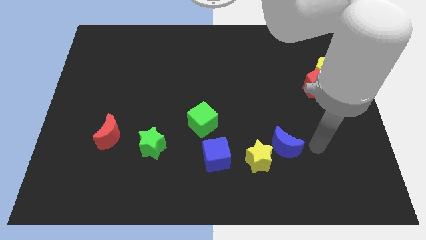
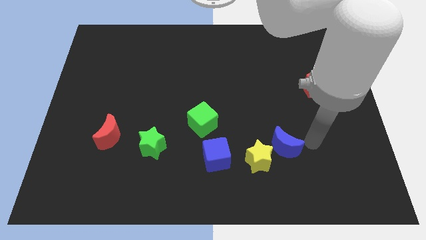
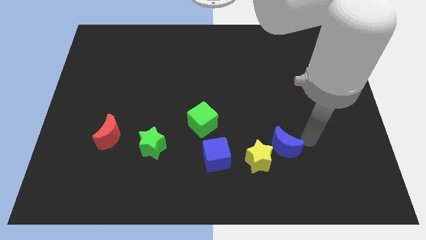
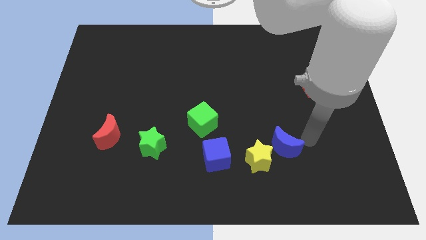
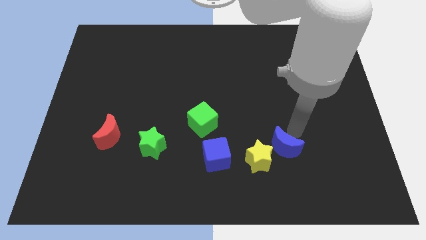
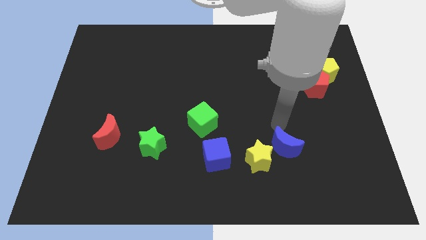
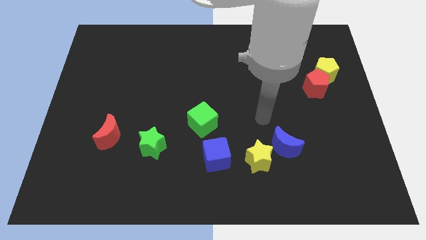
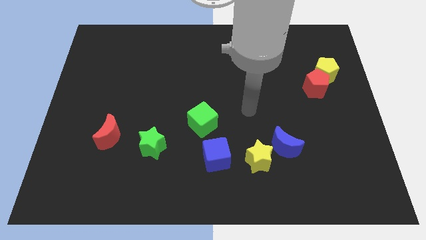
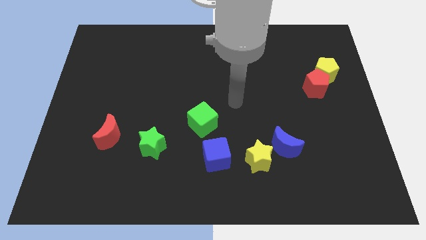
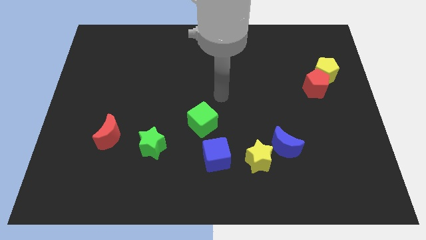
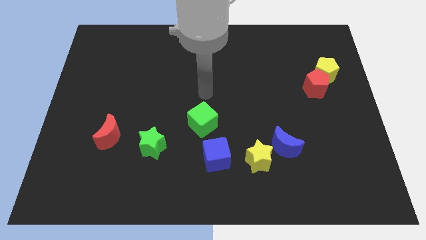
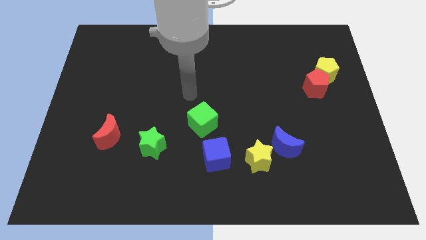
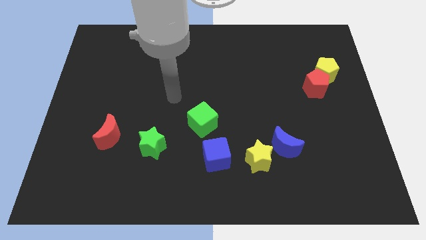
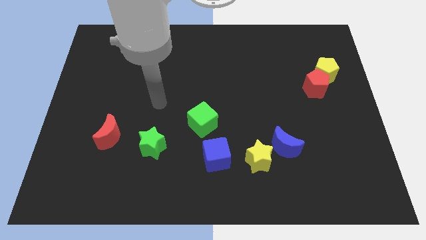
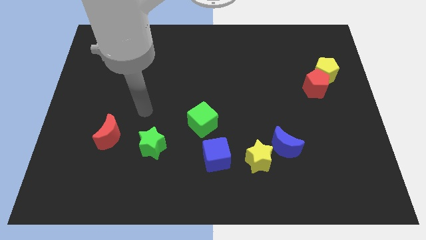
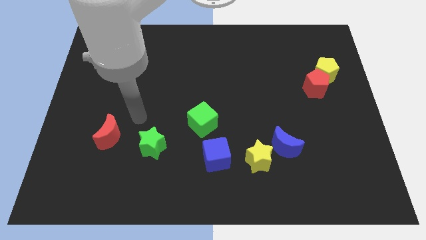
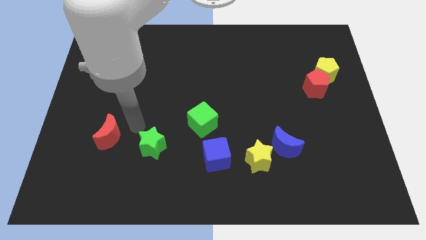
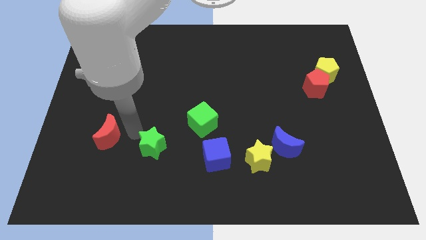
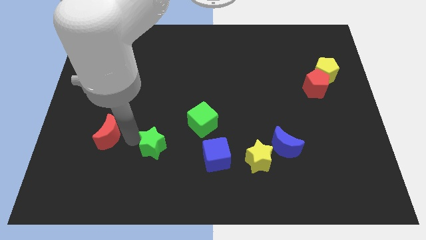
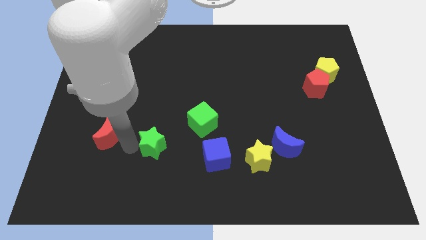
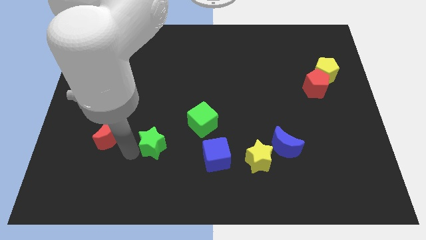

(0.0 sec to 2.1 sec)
move your arm to the left side of the green star

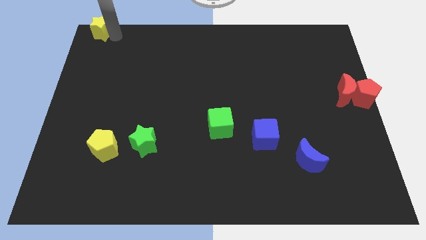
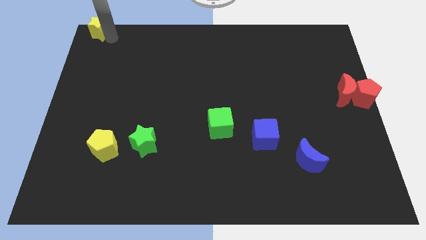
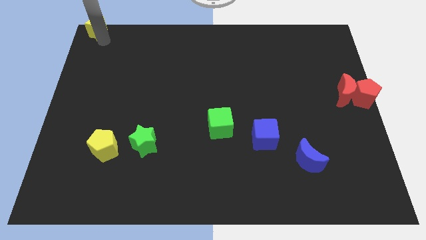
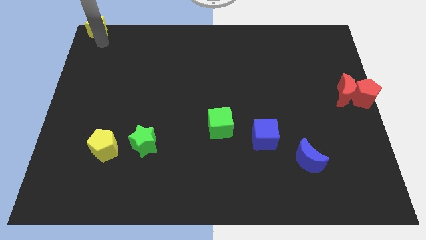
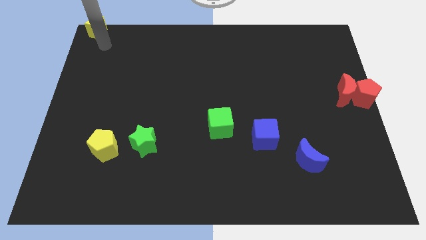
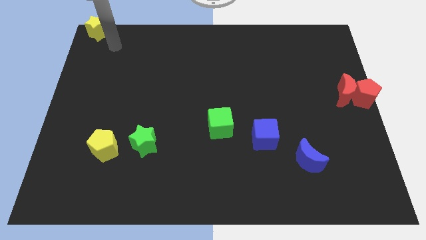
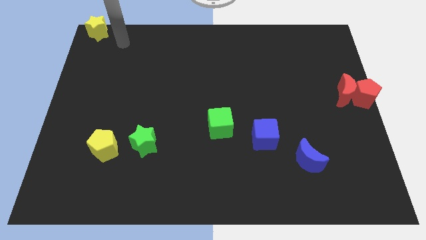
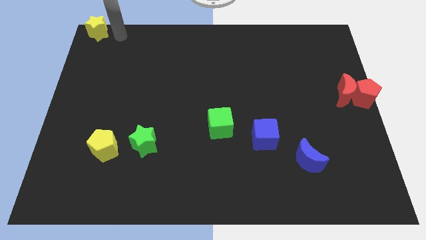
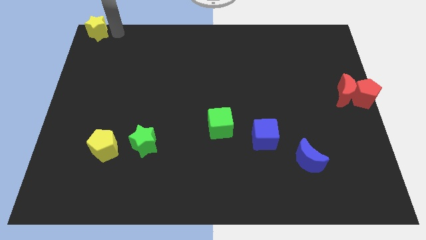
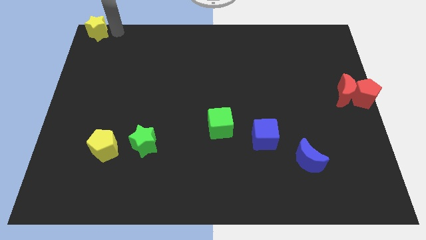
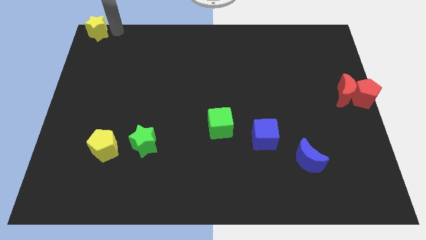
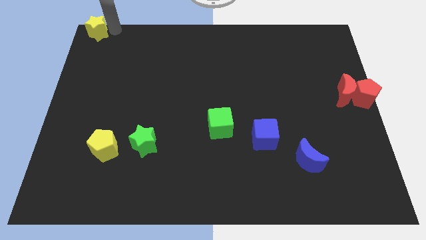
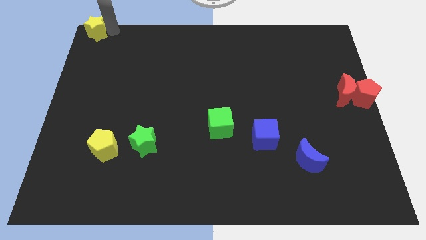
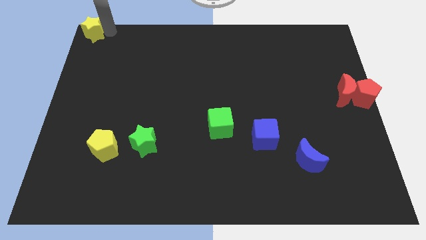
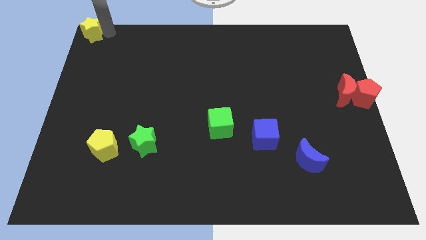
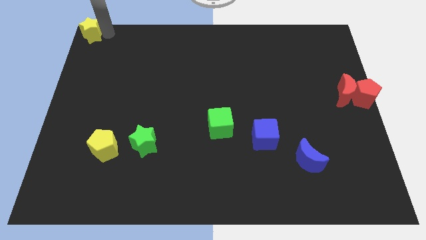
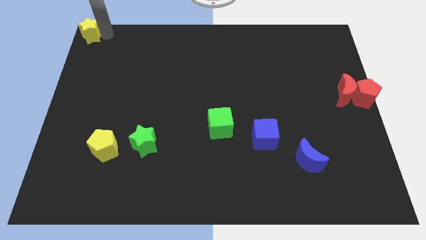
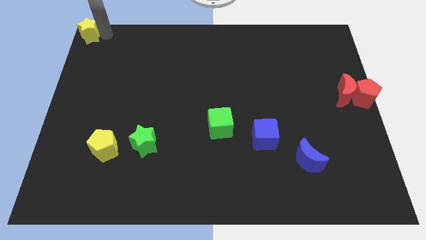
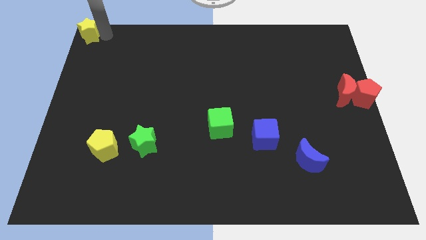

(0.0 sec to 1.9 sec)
place the yellow star at the top left corner of the board

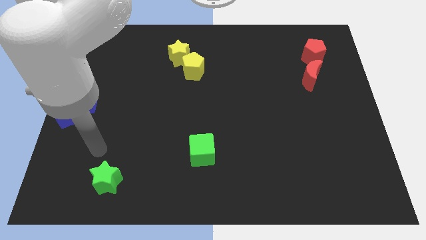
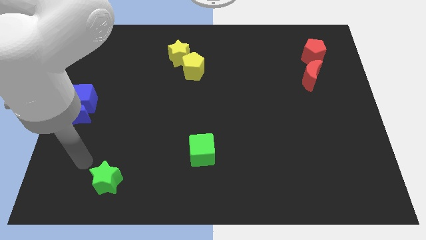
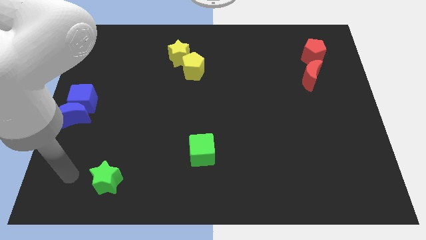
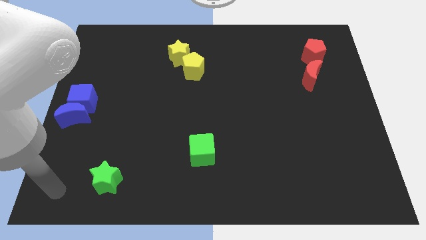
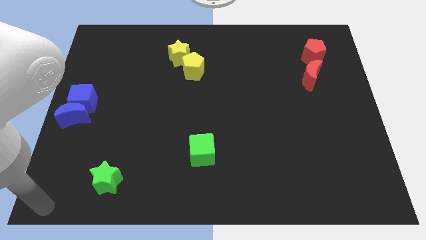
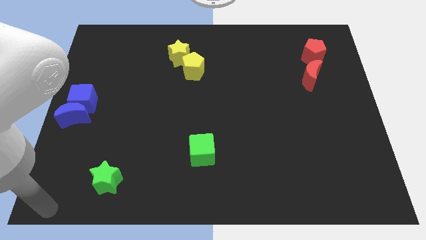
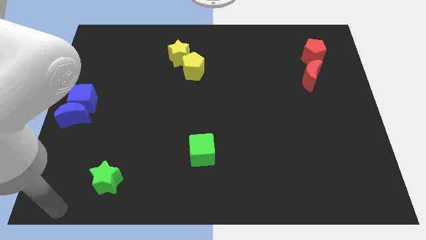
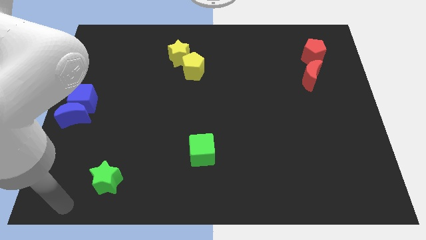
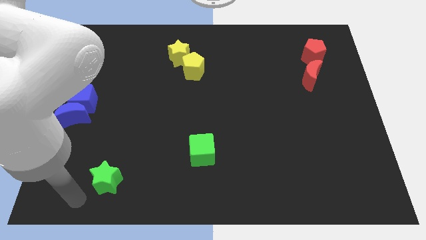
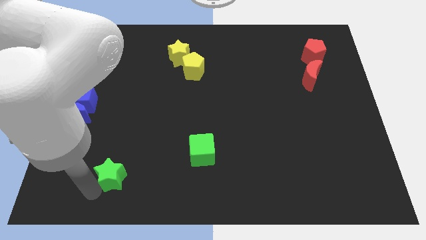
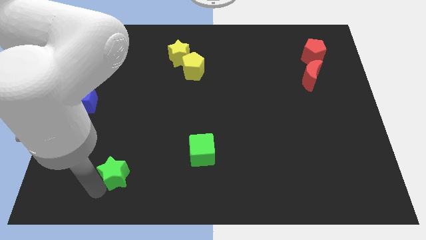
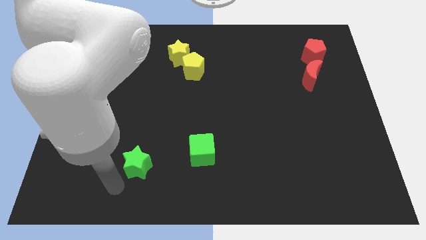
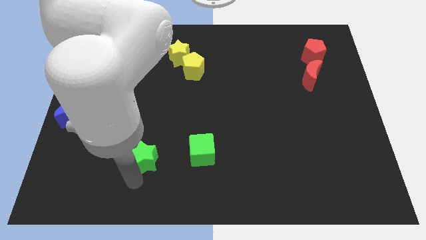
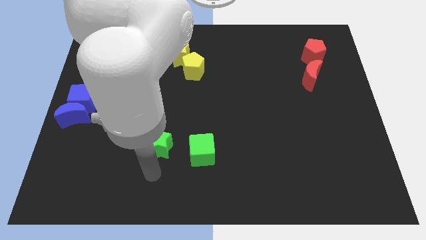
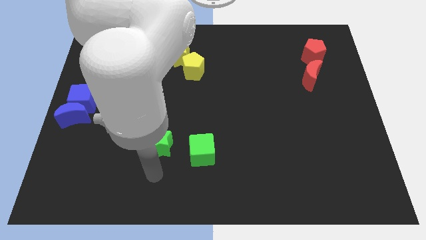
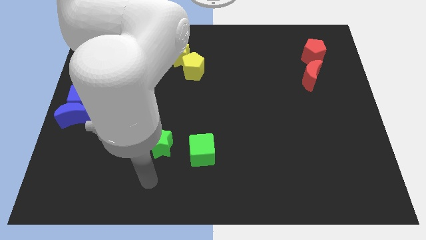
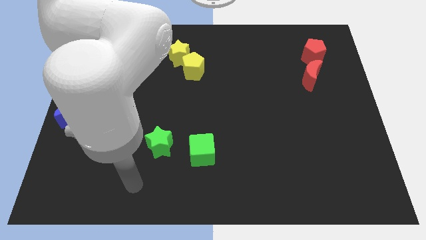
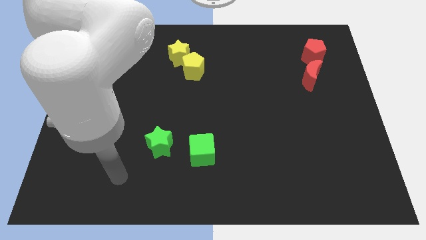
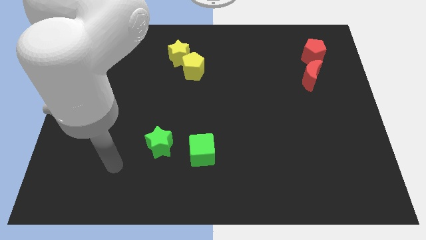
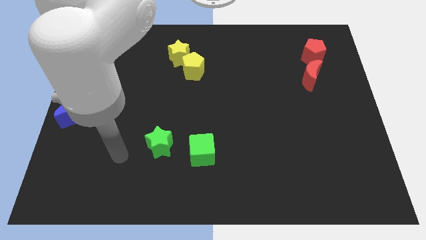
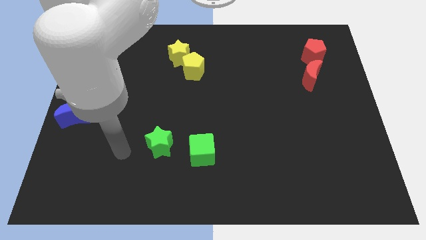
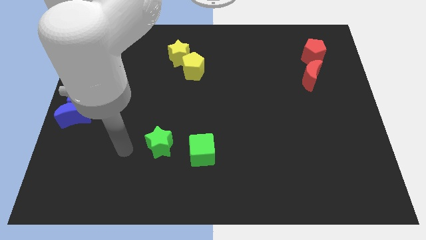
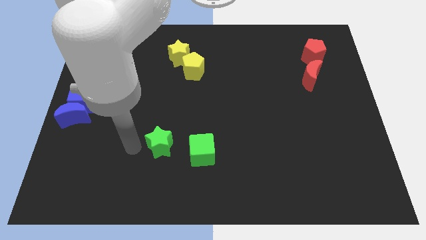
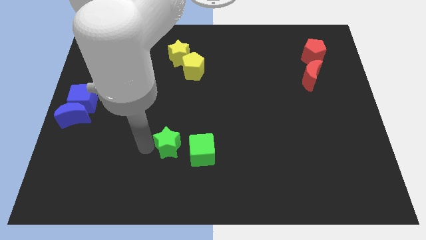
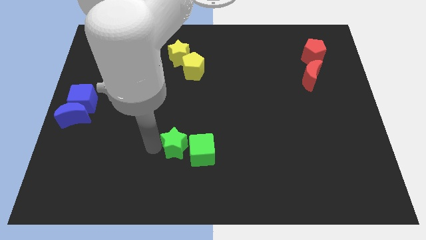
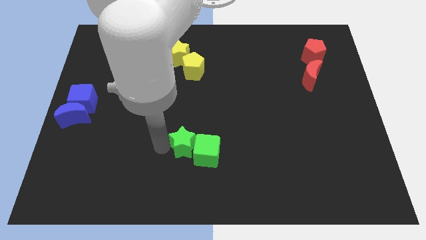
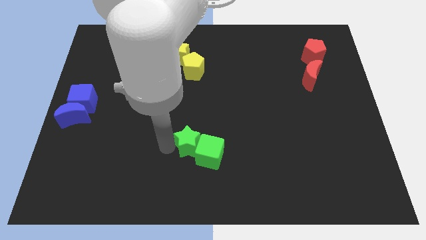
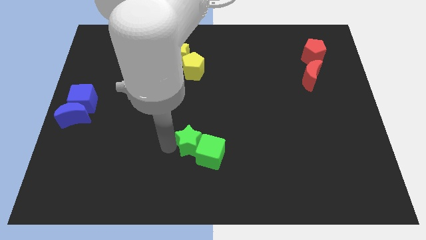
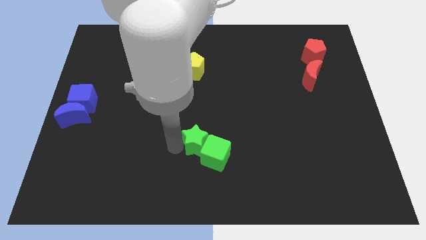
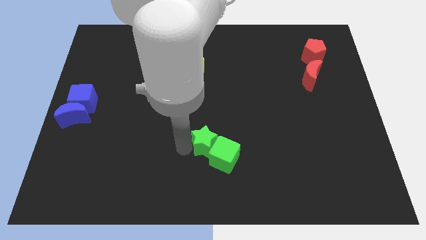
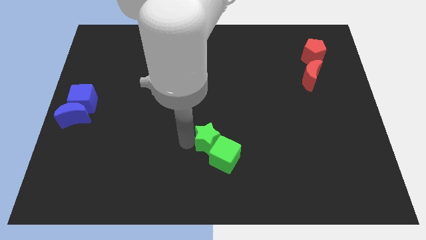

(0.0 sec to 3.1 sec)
push green star into the green cube

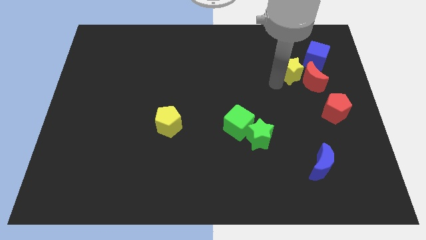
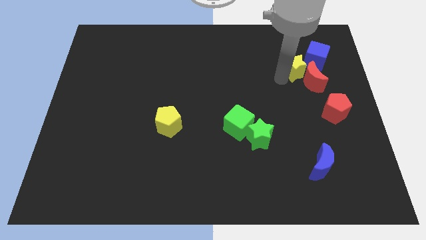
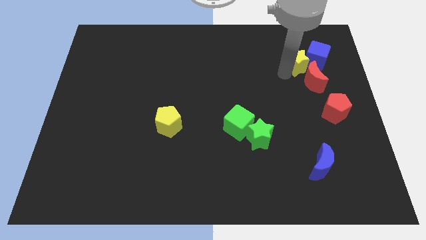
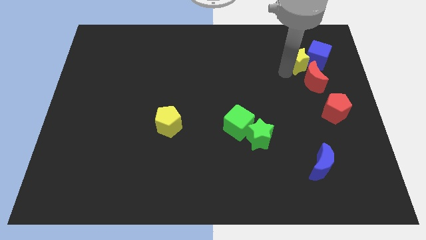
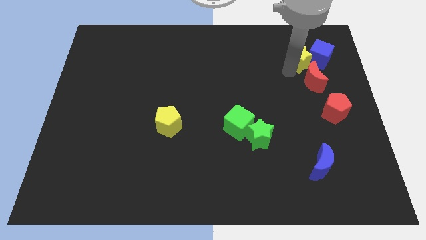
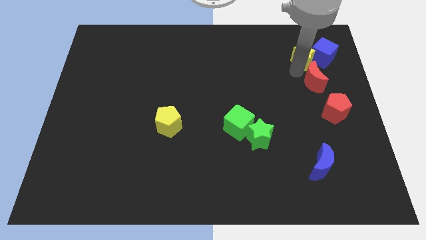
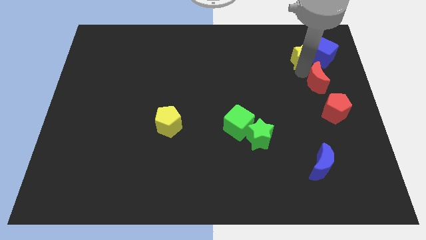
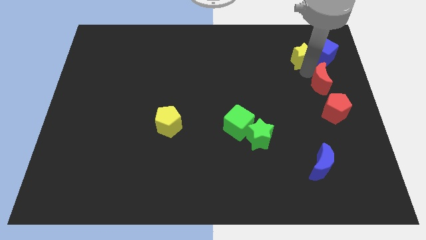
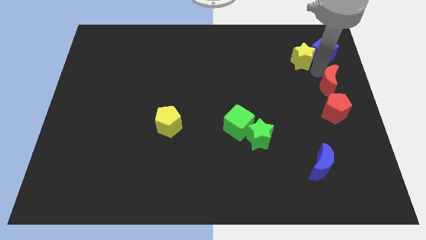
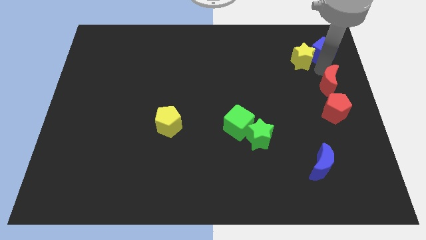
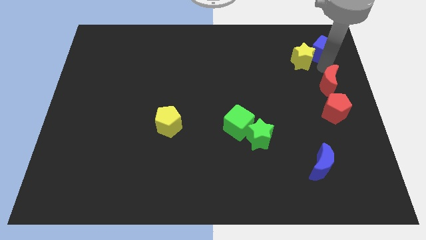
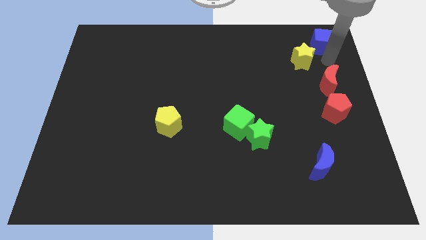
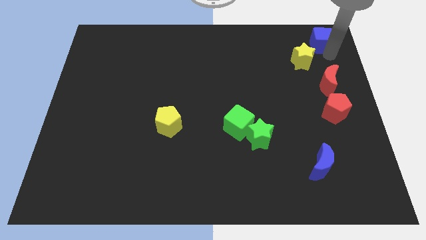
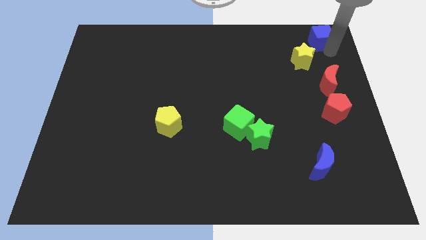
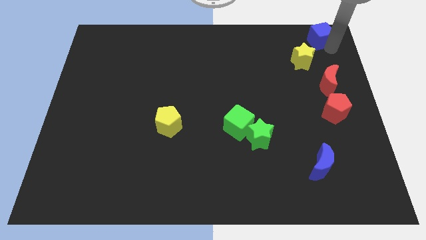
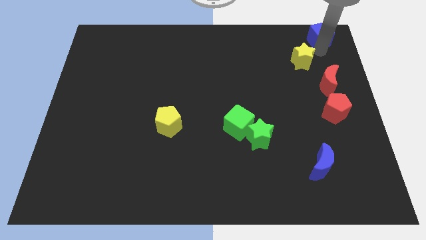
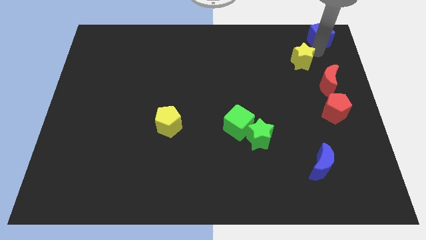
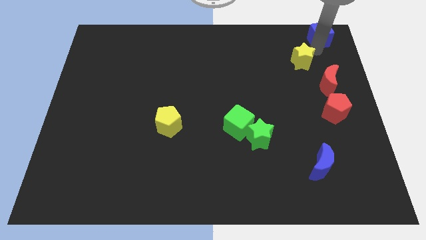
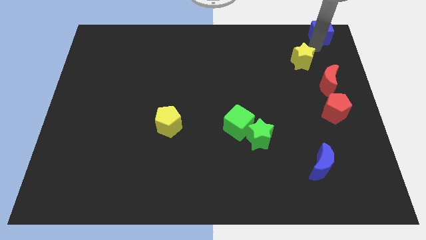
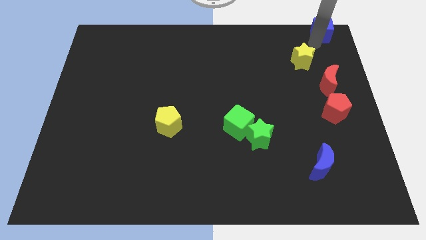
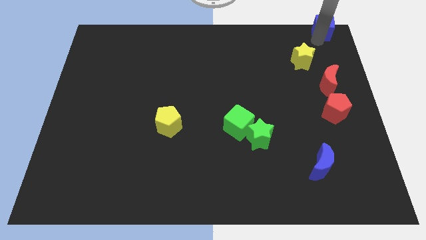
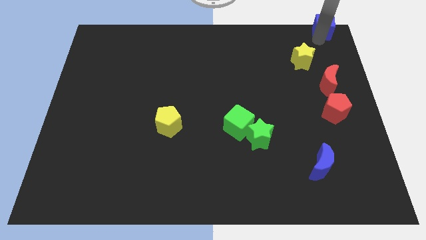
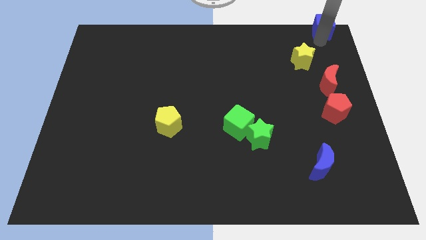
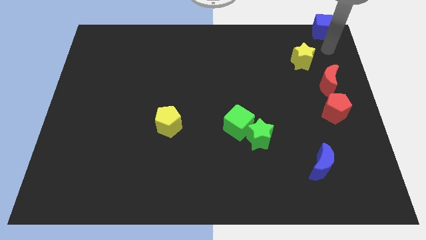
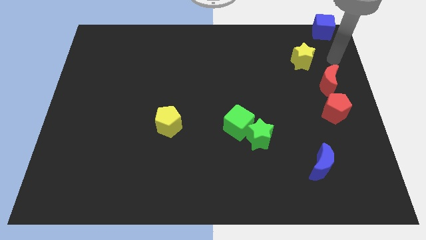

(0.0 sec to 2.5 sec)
separate the yellow star red moon and blue cube
